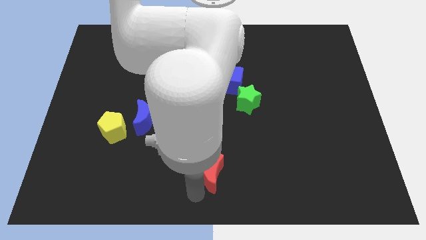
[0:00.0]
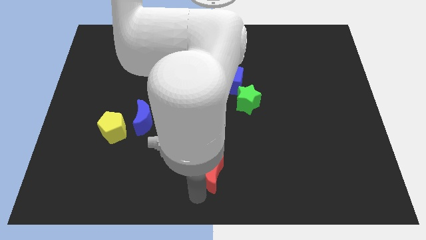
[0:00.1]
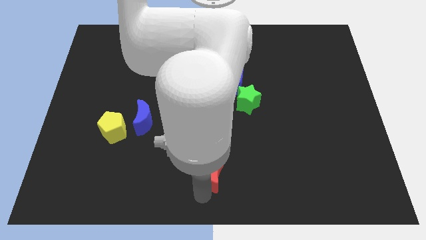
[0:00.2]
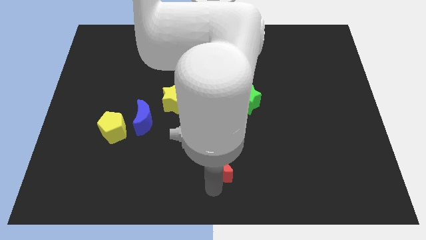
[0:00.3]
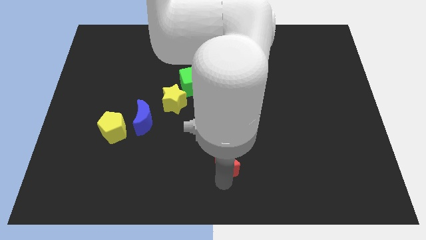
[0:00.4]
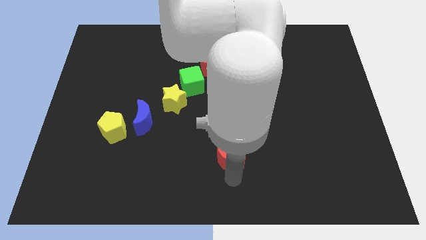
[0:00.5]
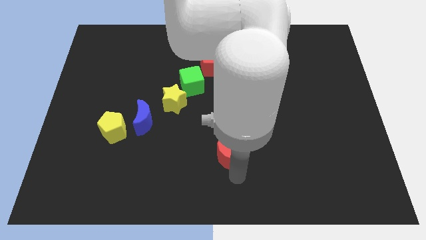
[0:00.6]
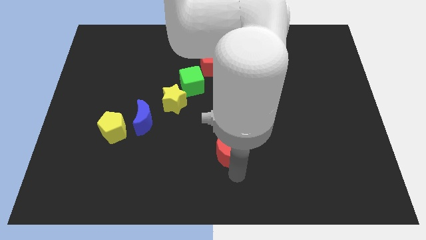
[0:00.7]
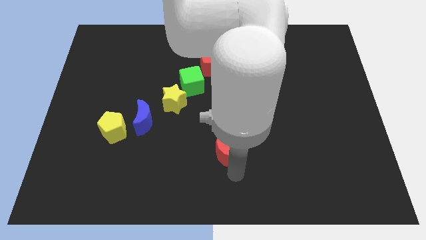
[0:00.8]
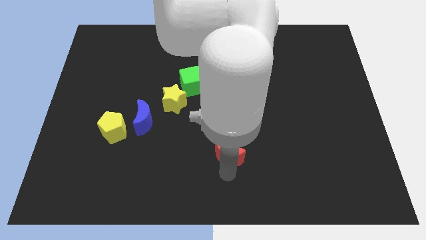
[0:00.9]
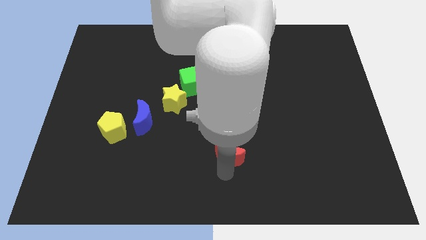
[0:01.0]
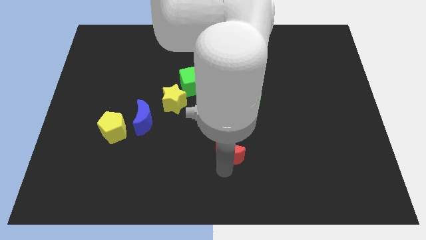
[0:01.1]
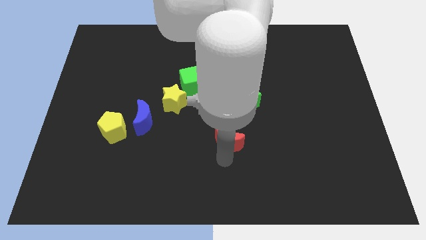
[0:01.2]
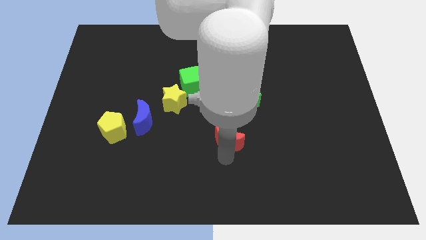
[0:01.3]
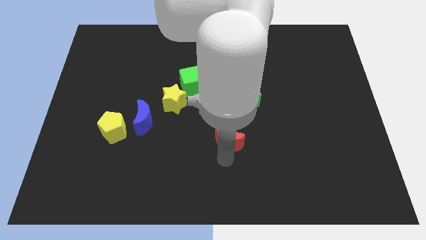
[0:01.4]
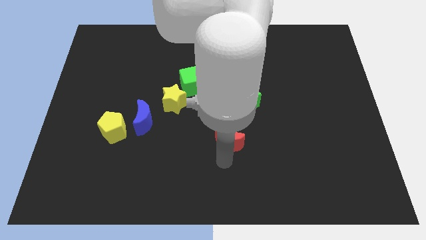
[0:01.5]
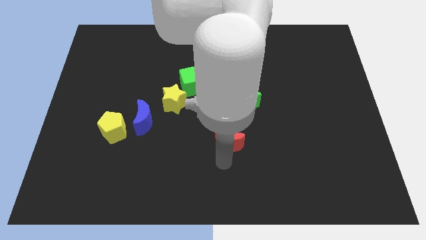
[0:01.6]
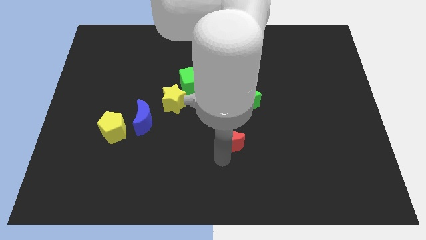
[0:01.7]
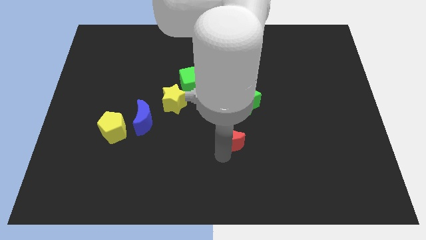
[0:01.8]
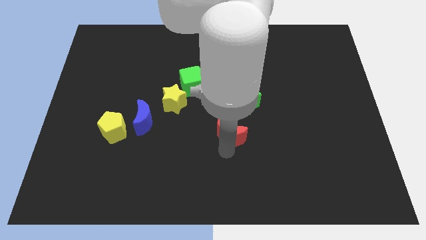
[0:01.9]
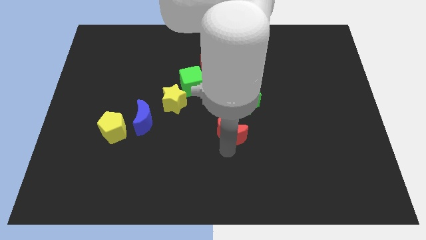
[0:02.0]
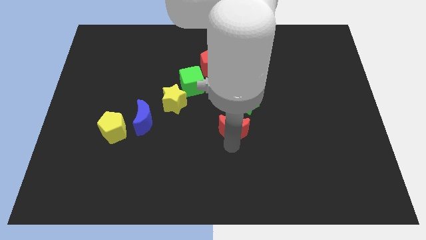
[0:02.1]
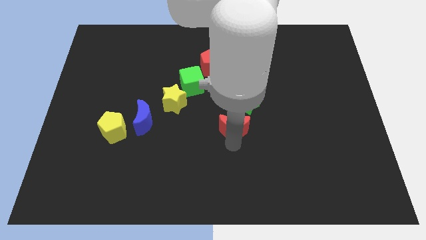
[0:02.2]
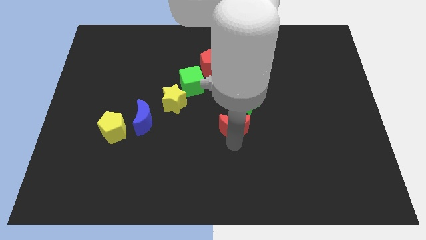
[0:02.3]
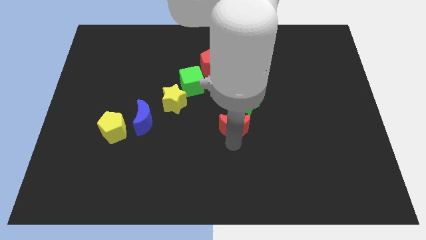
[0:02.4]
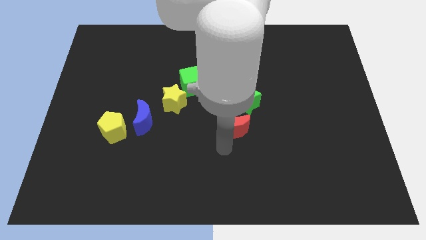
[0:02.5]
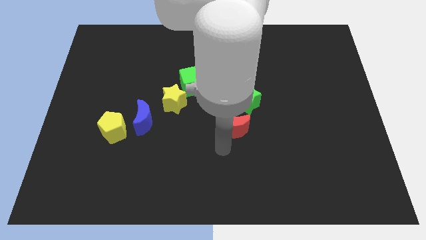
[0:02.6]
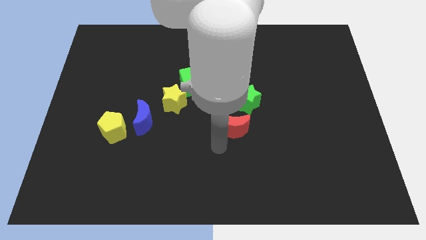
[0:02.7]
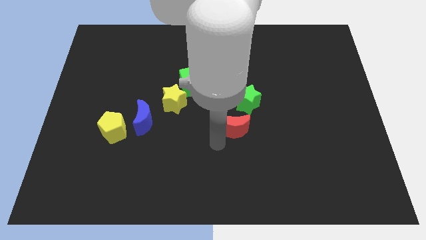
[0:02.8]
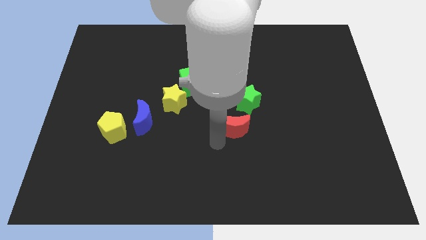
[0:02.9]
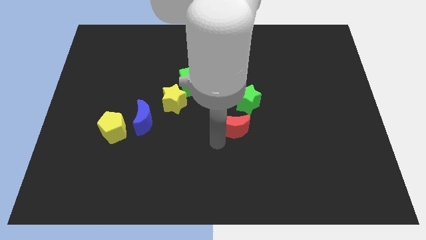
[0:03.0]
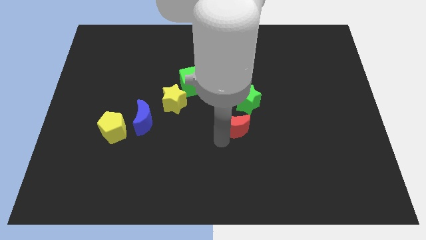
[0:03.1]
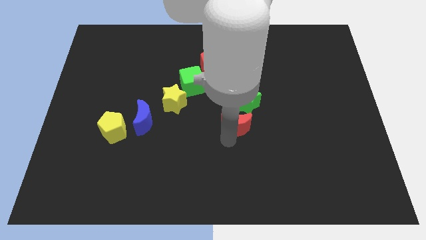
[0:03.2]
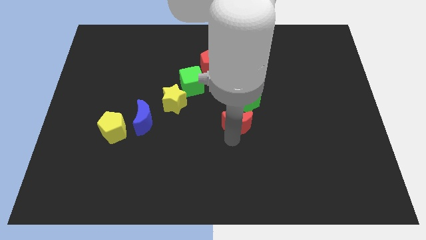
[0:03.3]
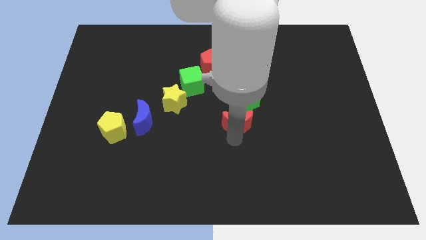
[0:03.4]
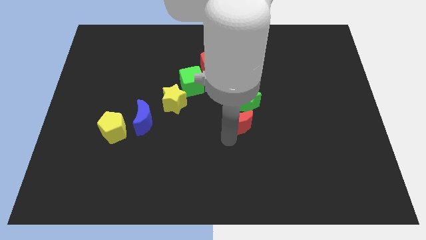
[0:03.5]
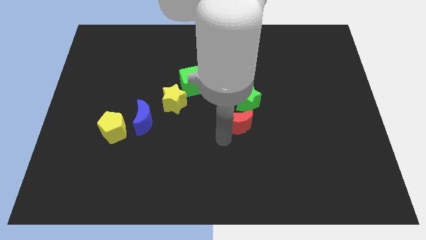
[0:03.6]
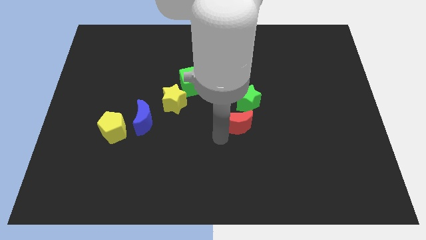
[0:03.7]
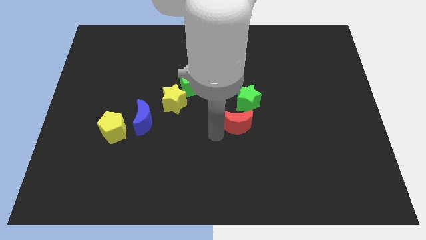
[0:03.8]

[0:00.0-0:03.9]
drag the red moon slightly upwards

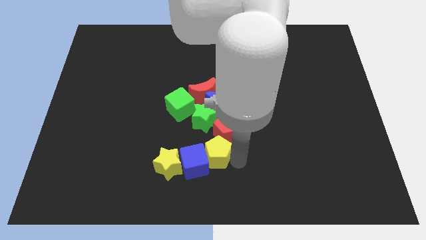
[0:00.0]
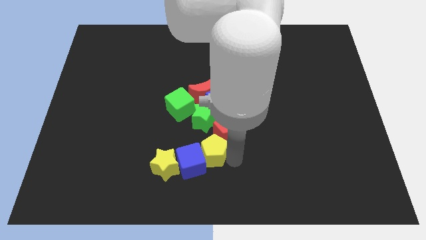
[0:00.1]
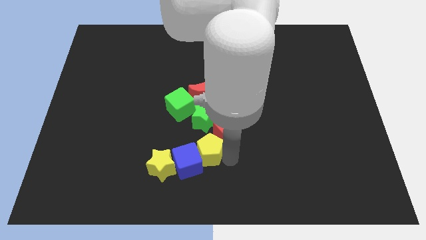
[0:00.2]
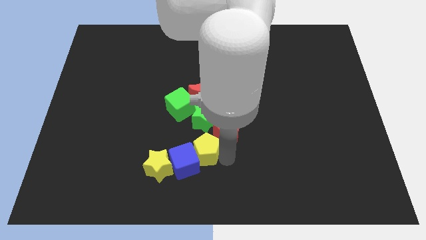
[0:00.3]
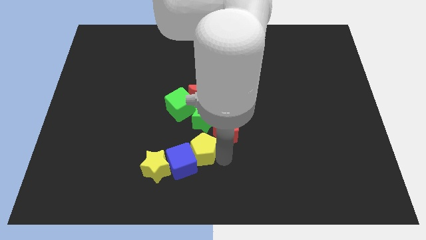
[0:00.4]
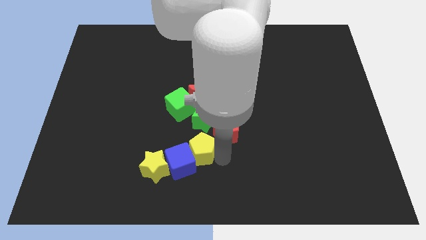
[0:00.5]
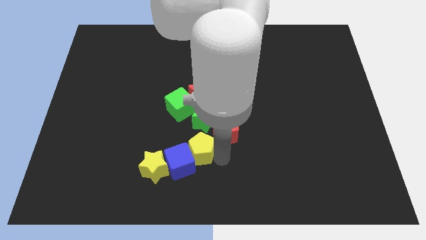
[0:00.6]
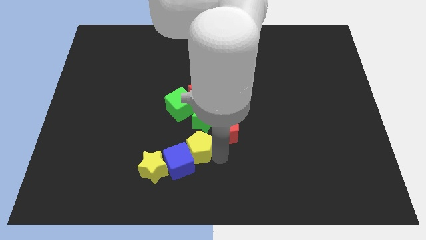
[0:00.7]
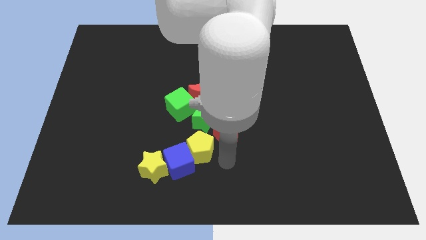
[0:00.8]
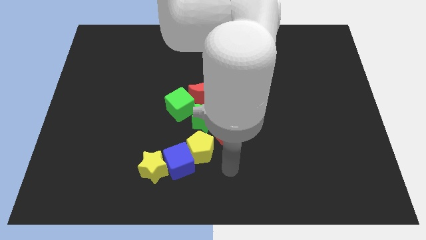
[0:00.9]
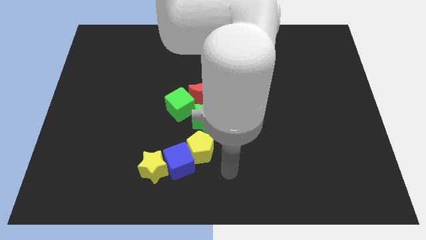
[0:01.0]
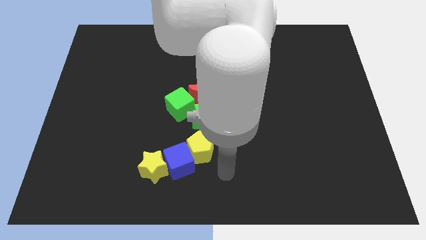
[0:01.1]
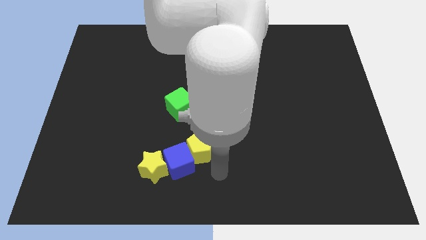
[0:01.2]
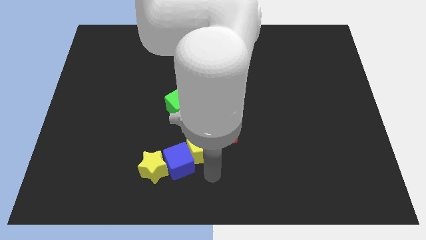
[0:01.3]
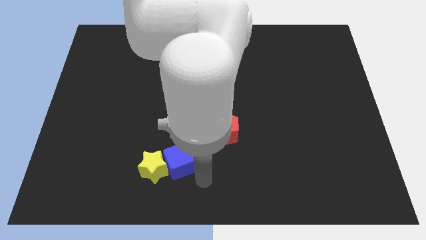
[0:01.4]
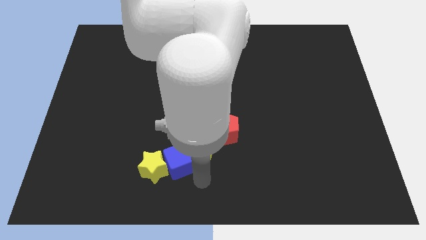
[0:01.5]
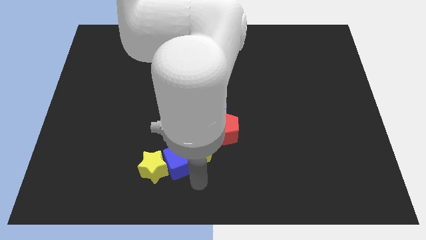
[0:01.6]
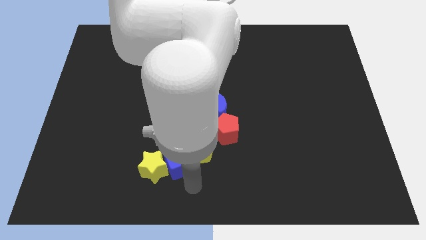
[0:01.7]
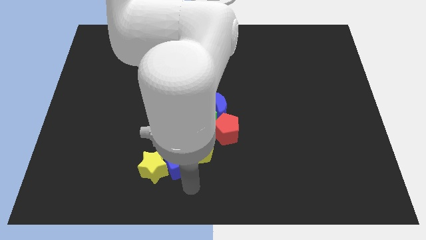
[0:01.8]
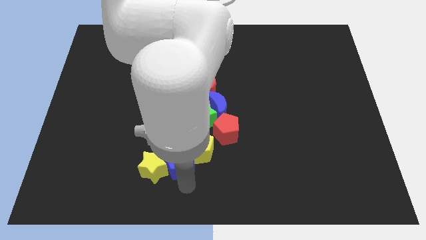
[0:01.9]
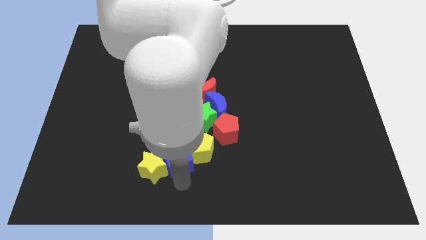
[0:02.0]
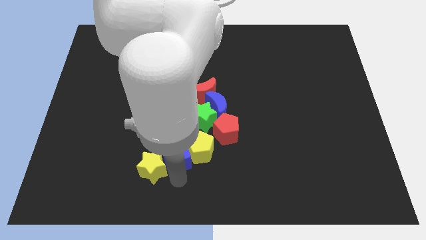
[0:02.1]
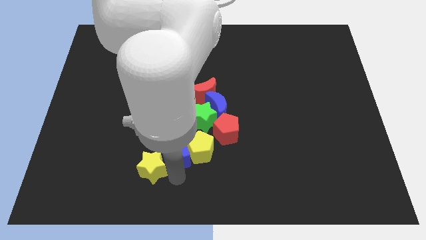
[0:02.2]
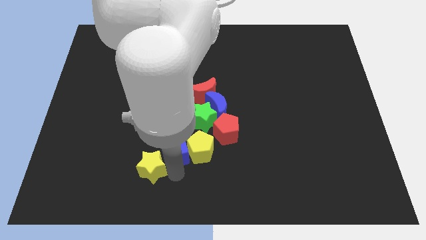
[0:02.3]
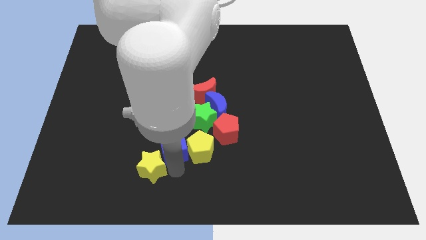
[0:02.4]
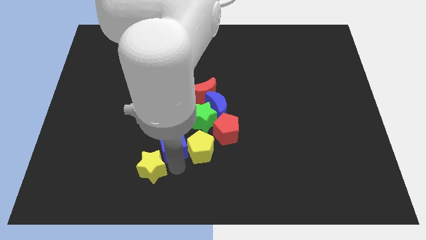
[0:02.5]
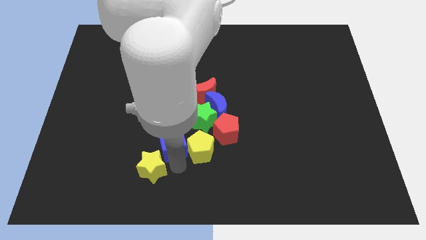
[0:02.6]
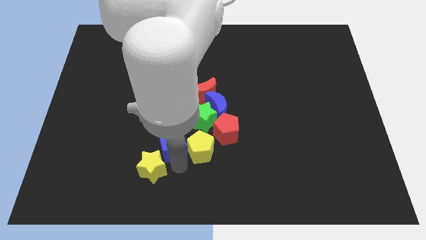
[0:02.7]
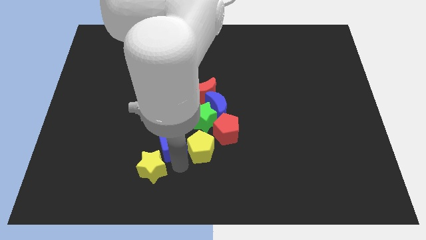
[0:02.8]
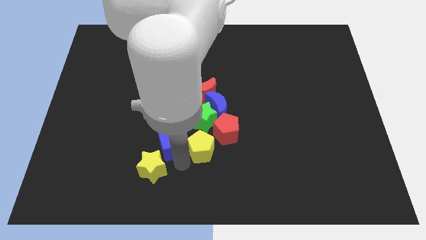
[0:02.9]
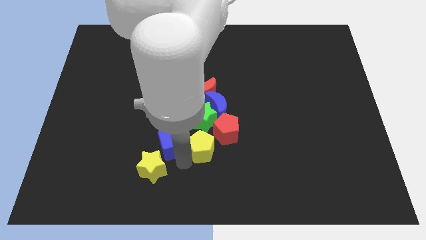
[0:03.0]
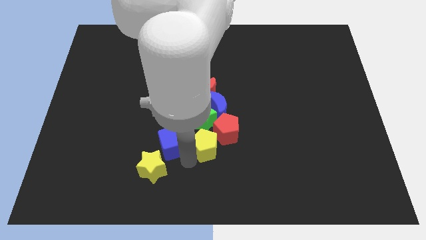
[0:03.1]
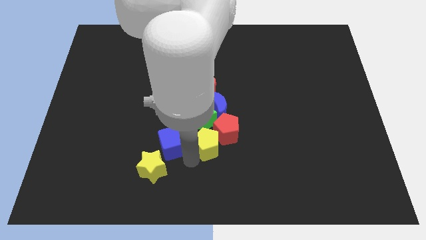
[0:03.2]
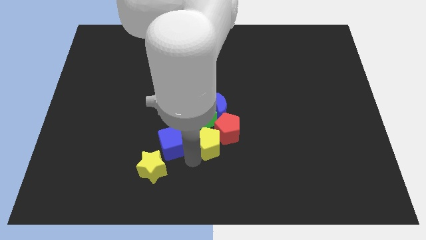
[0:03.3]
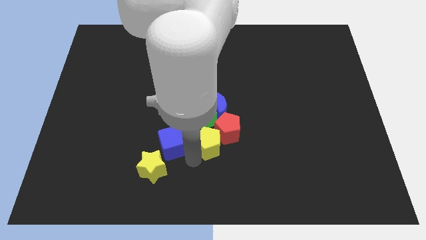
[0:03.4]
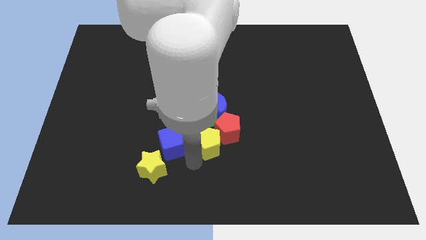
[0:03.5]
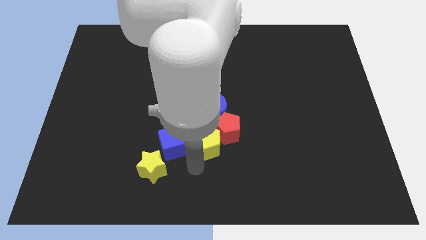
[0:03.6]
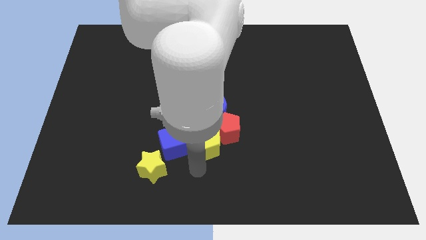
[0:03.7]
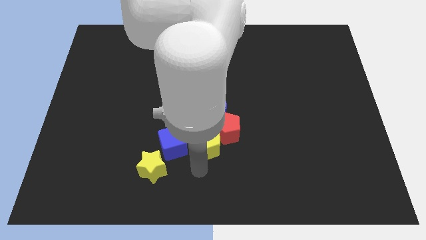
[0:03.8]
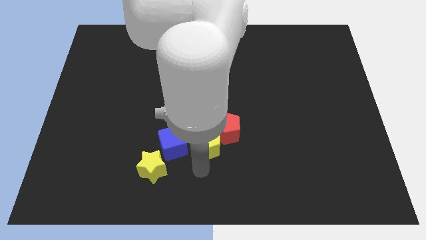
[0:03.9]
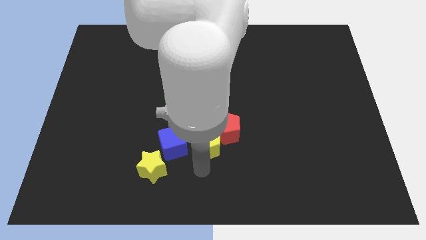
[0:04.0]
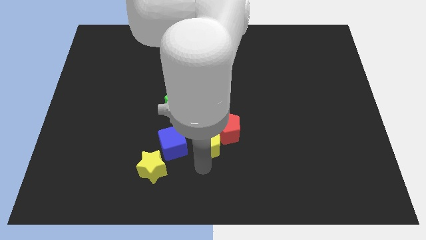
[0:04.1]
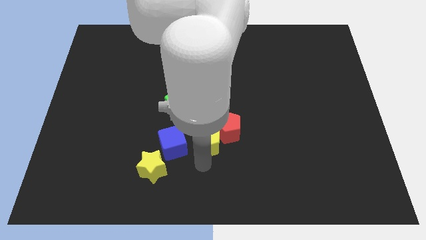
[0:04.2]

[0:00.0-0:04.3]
separate the blue cube from the yellow pentagon

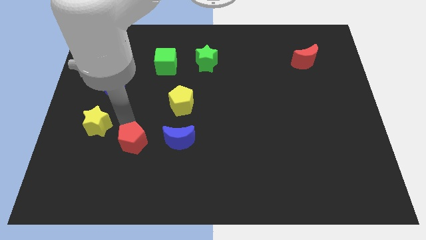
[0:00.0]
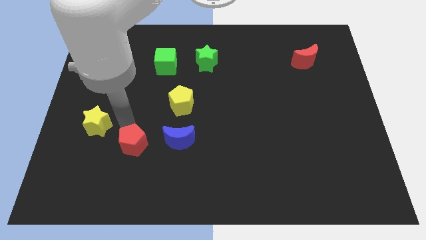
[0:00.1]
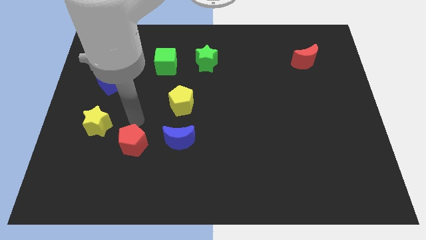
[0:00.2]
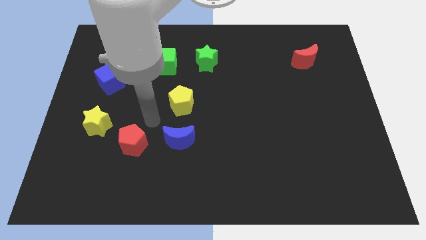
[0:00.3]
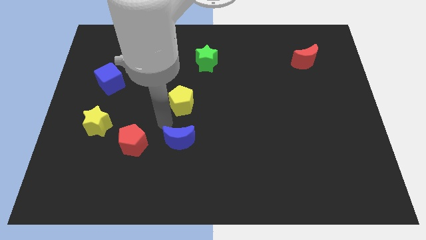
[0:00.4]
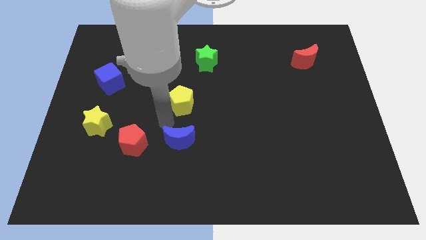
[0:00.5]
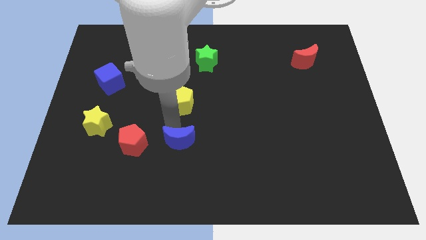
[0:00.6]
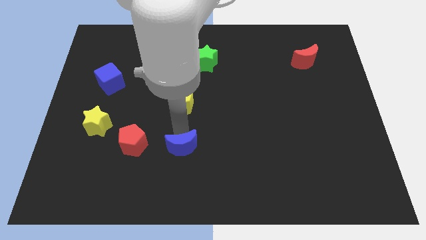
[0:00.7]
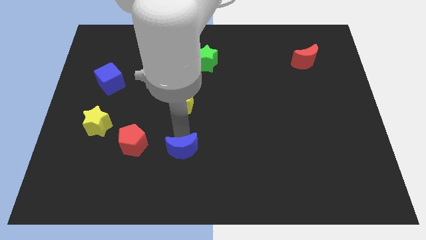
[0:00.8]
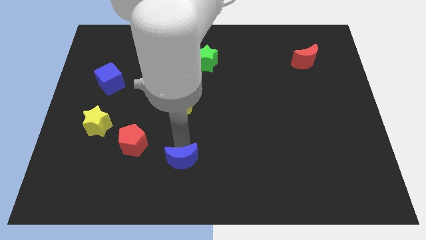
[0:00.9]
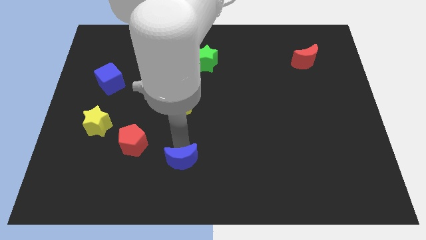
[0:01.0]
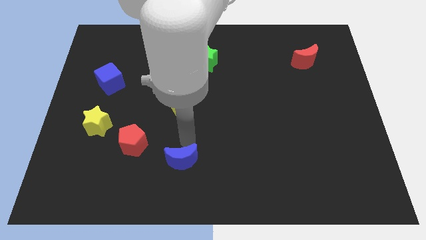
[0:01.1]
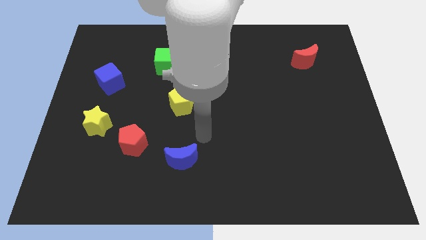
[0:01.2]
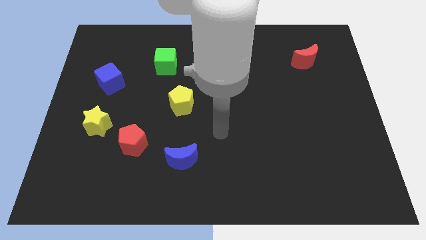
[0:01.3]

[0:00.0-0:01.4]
slightly push the blue moon towards down
